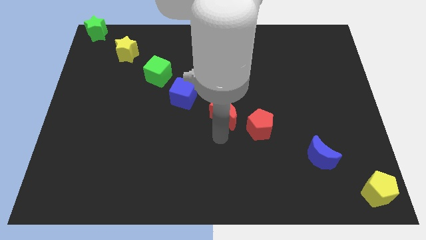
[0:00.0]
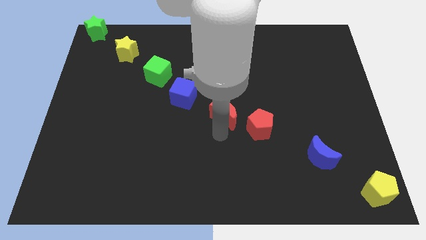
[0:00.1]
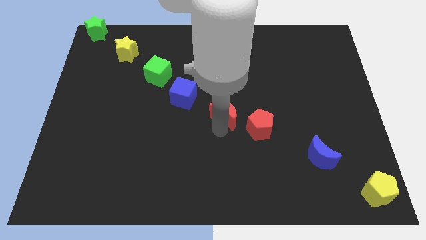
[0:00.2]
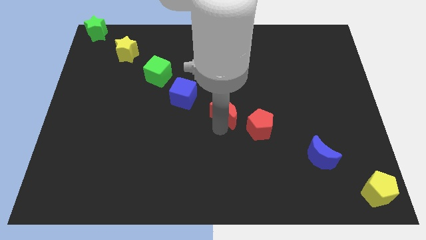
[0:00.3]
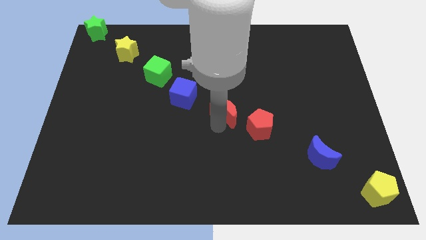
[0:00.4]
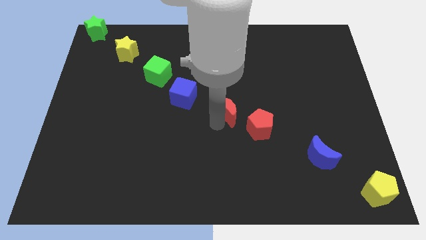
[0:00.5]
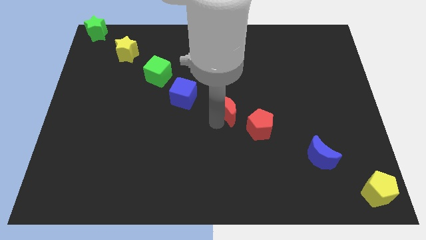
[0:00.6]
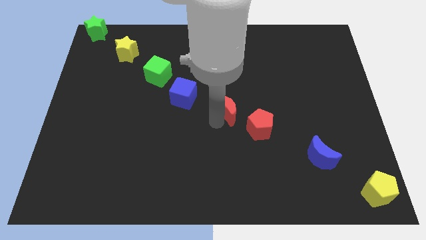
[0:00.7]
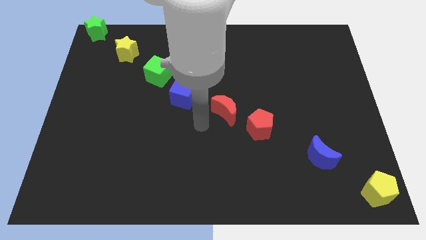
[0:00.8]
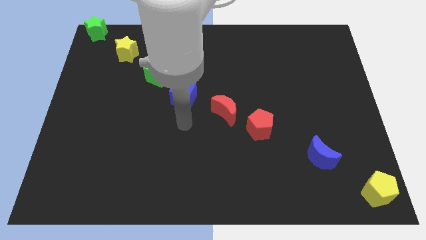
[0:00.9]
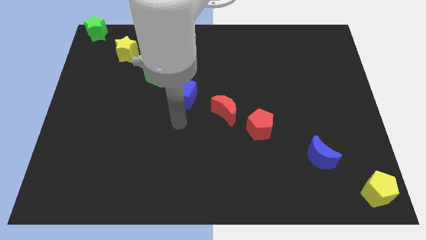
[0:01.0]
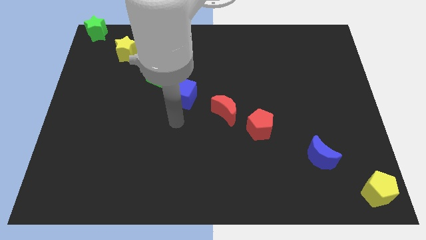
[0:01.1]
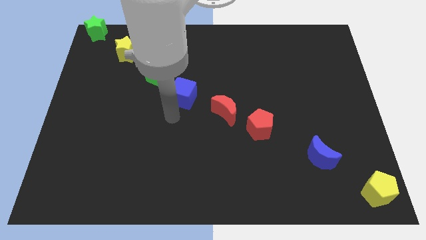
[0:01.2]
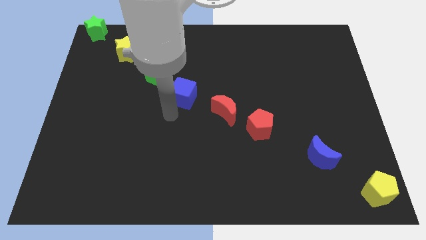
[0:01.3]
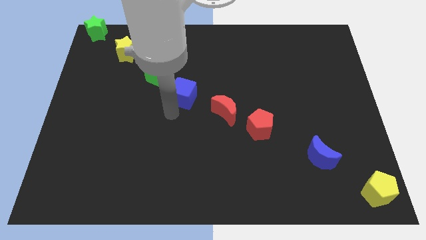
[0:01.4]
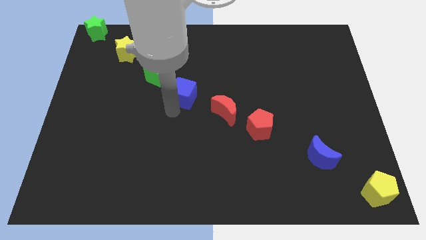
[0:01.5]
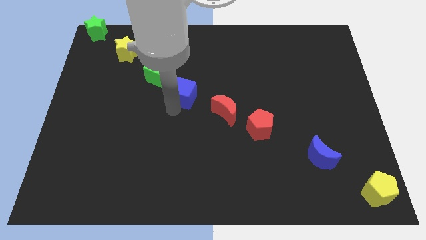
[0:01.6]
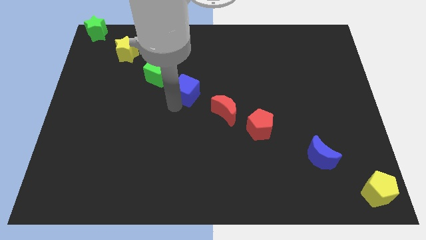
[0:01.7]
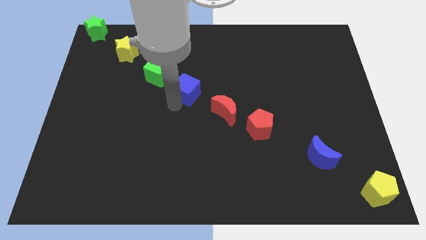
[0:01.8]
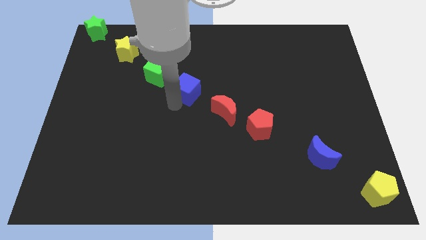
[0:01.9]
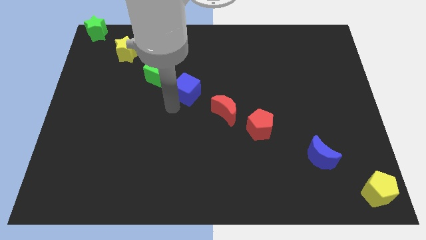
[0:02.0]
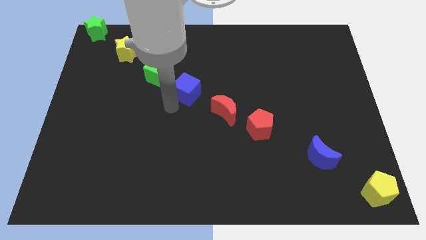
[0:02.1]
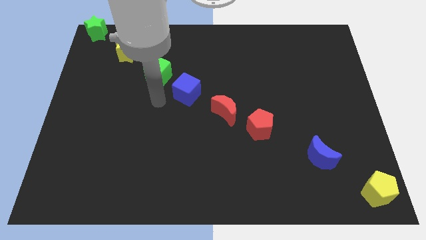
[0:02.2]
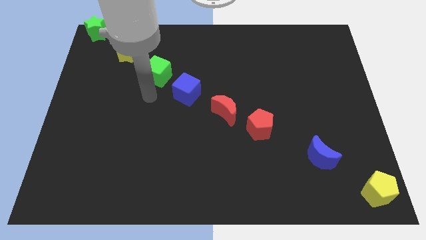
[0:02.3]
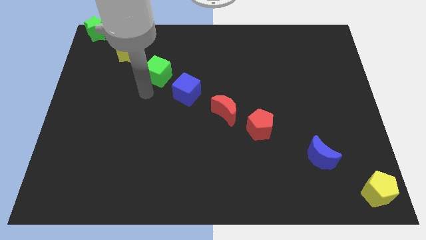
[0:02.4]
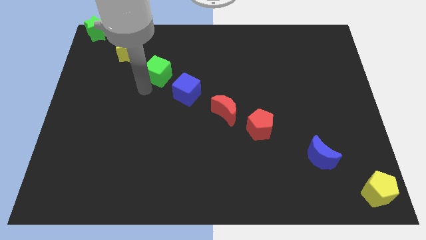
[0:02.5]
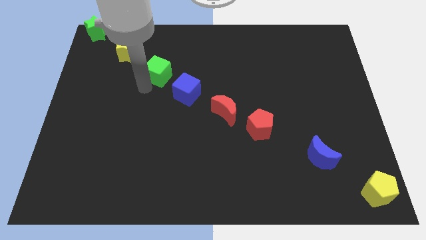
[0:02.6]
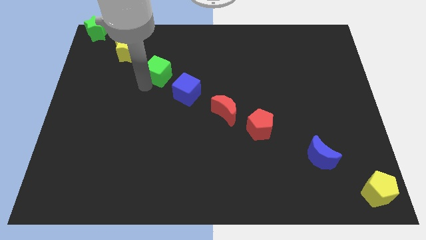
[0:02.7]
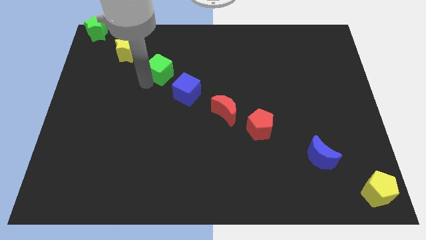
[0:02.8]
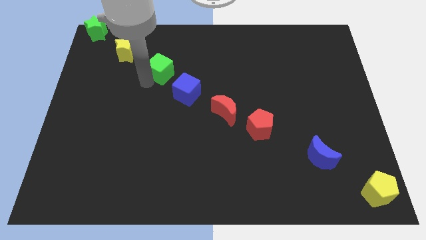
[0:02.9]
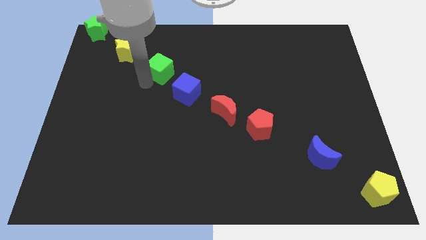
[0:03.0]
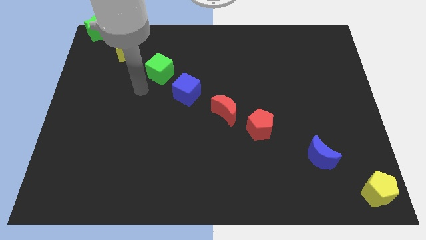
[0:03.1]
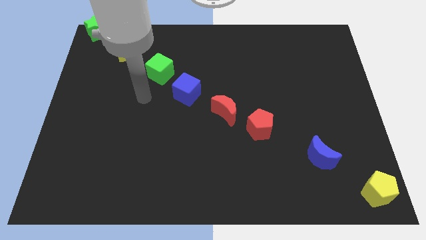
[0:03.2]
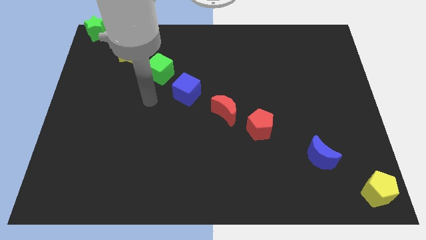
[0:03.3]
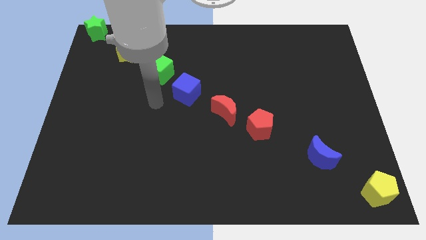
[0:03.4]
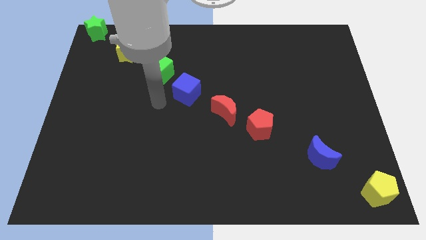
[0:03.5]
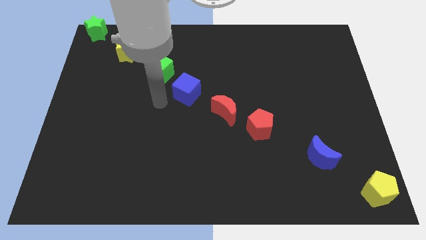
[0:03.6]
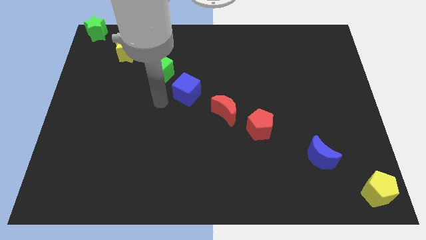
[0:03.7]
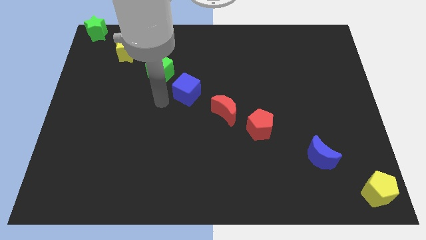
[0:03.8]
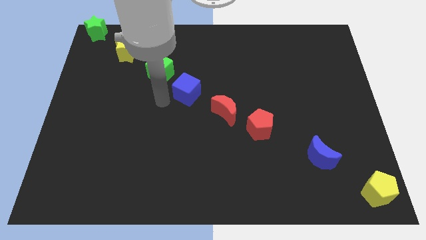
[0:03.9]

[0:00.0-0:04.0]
adjust the red moonblue cubegreen cube diagonally

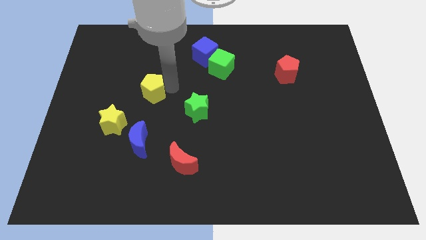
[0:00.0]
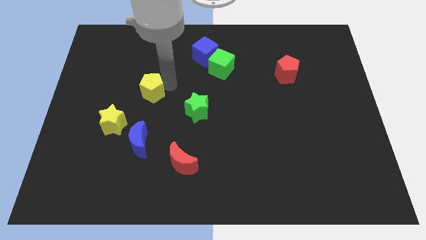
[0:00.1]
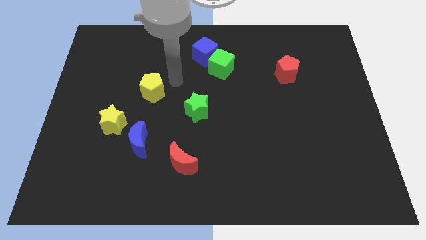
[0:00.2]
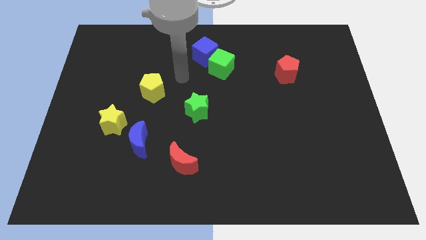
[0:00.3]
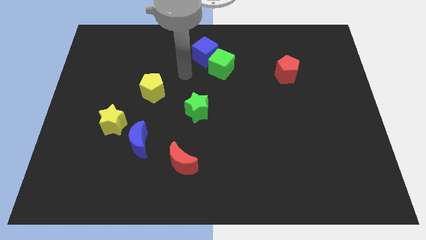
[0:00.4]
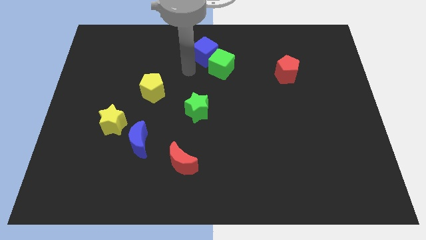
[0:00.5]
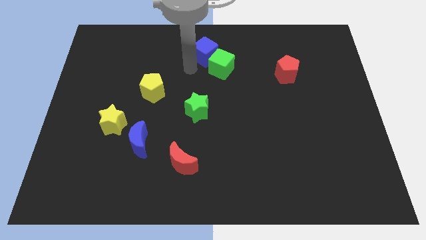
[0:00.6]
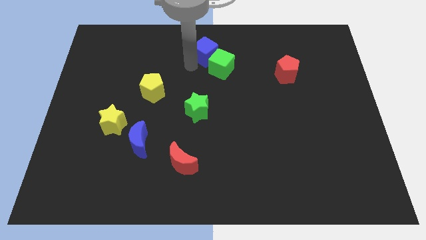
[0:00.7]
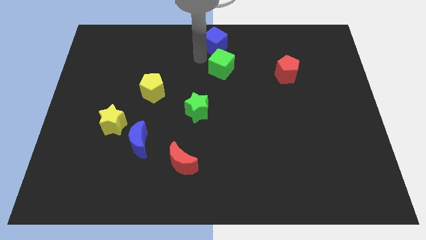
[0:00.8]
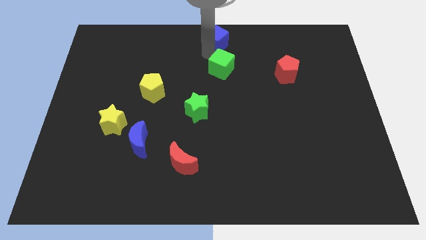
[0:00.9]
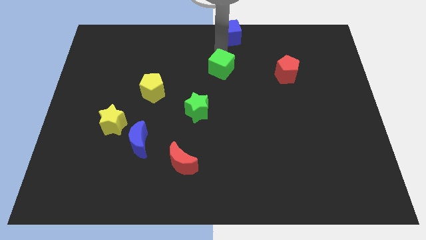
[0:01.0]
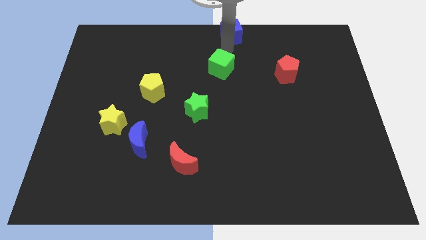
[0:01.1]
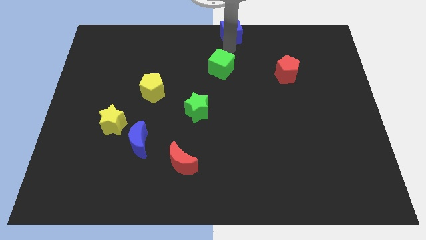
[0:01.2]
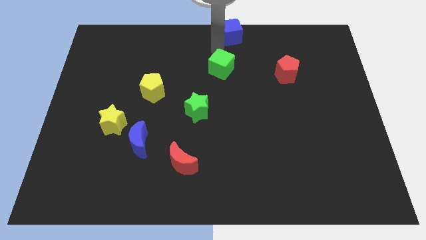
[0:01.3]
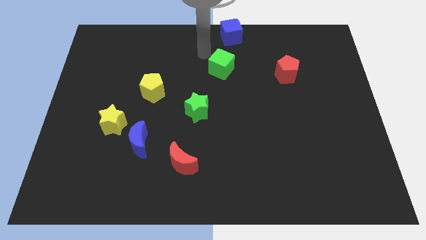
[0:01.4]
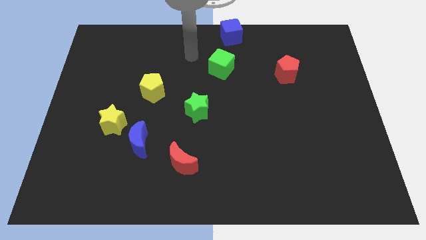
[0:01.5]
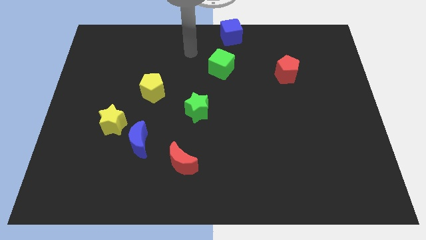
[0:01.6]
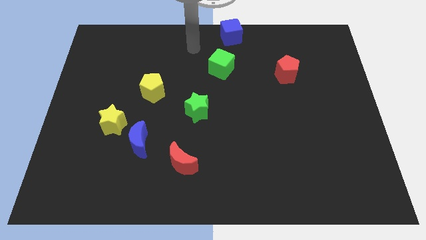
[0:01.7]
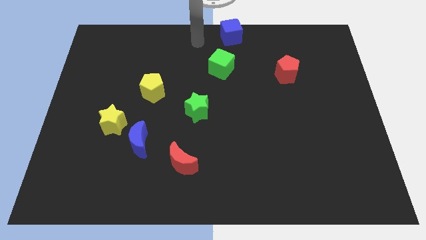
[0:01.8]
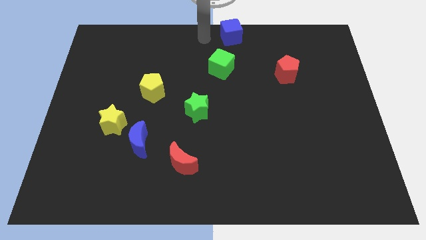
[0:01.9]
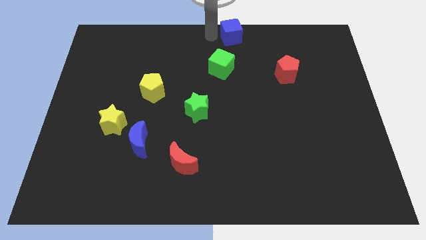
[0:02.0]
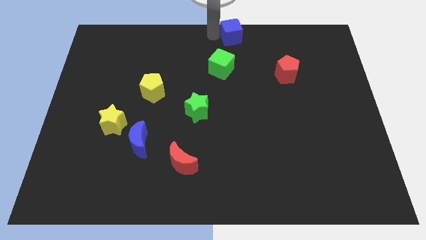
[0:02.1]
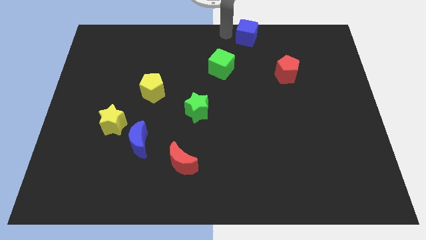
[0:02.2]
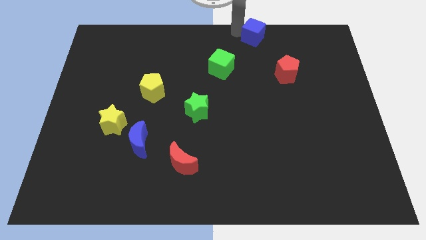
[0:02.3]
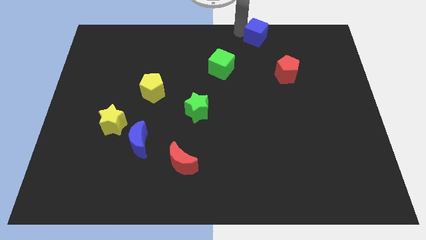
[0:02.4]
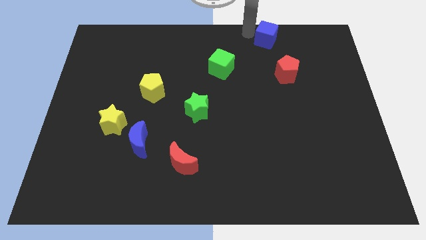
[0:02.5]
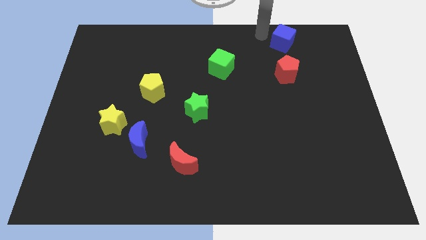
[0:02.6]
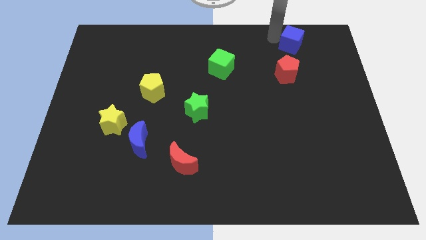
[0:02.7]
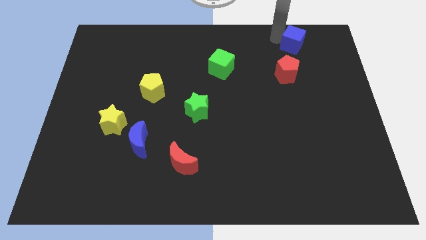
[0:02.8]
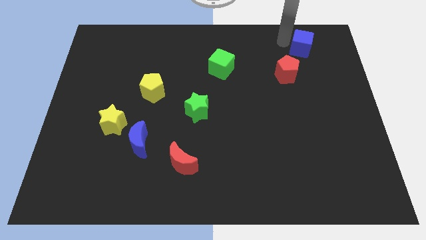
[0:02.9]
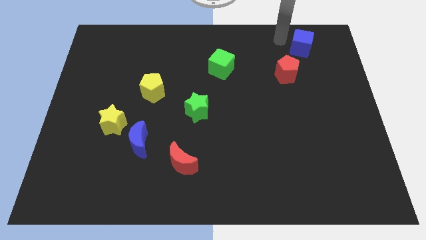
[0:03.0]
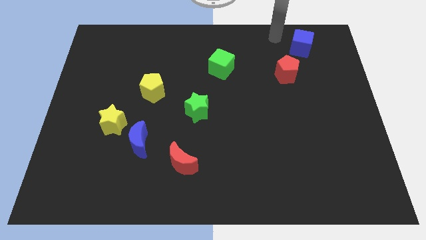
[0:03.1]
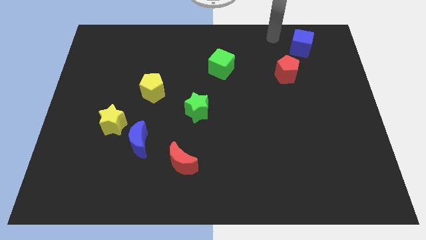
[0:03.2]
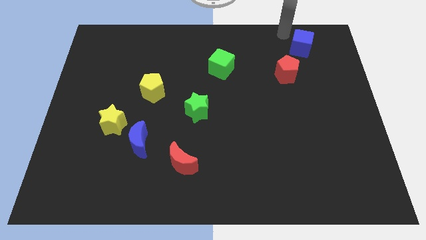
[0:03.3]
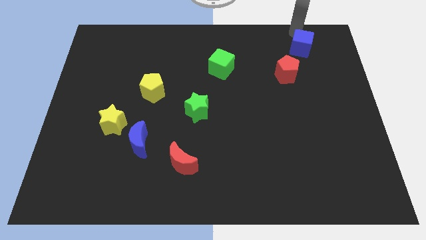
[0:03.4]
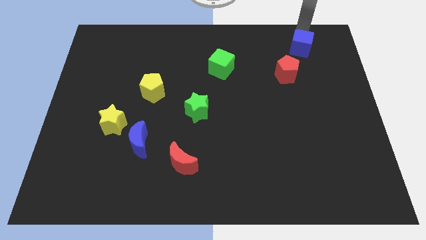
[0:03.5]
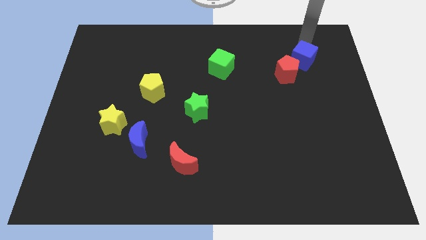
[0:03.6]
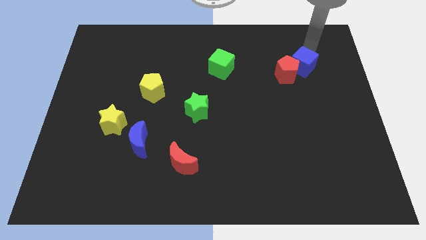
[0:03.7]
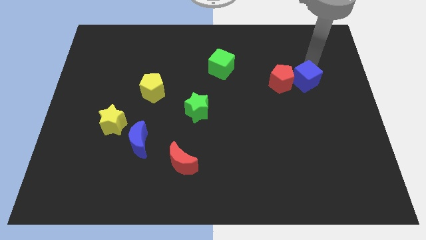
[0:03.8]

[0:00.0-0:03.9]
place the blue cube to the right side of red pentagon

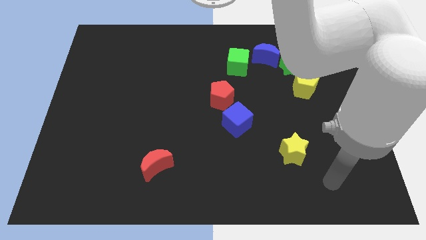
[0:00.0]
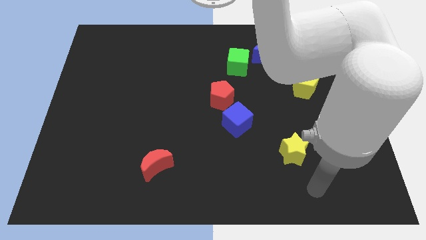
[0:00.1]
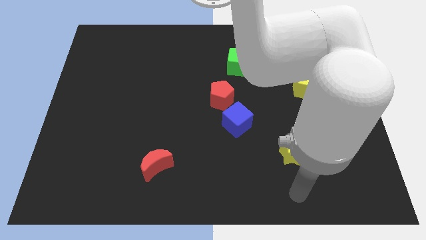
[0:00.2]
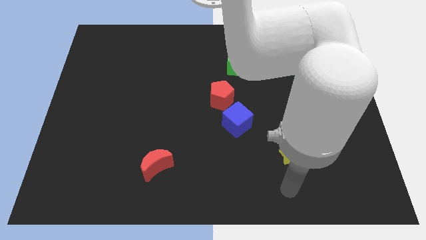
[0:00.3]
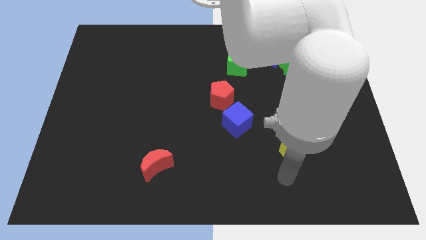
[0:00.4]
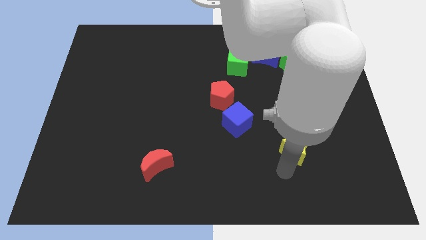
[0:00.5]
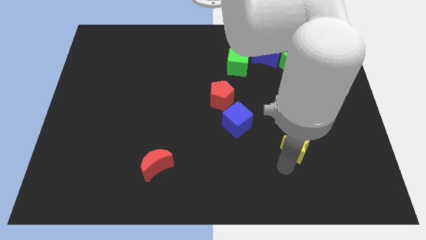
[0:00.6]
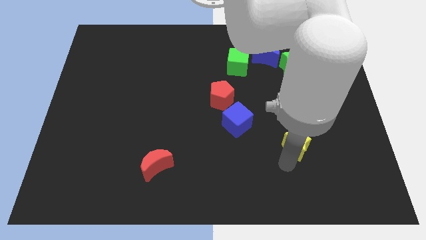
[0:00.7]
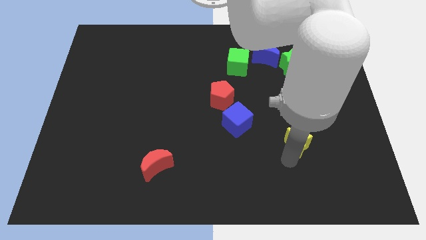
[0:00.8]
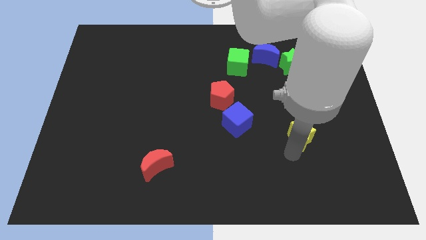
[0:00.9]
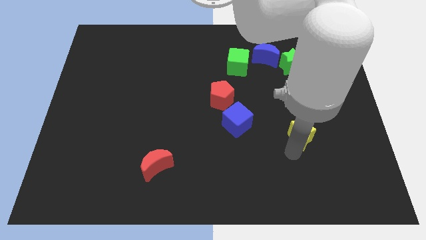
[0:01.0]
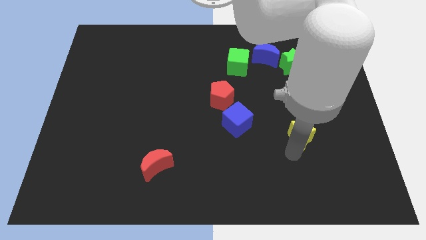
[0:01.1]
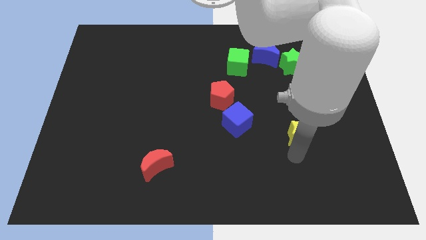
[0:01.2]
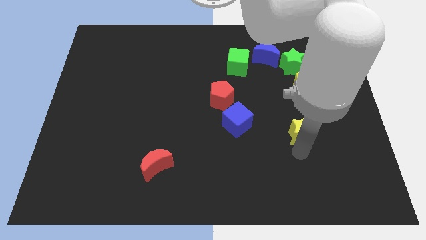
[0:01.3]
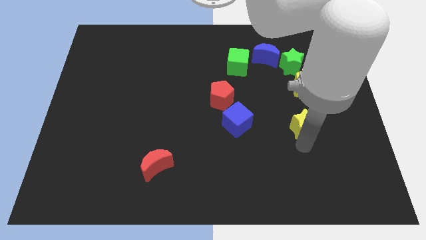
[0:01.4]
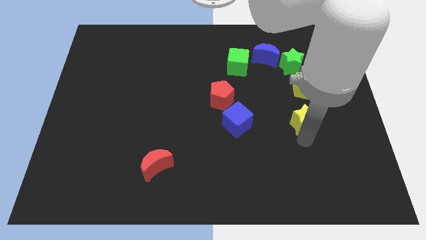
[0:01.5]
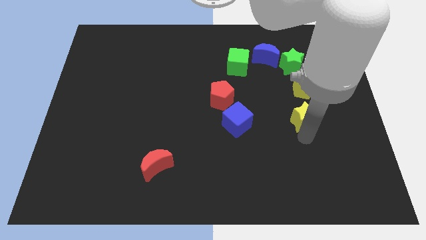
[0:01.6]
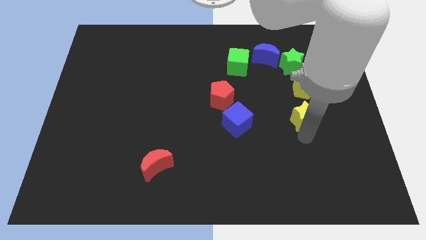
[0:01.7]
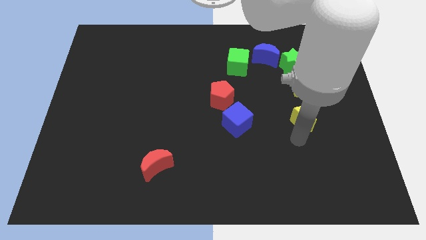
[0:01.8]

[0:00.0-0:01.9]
push the yellow star to the bottom of the yellow pentagon
